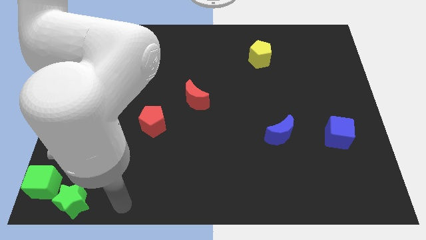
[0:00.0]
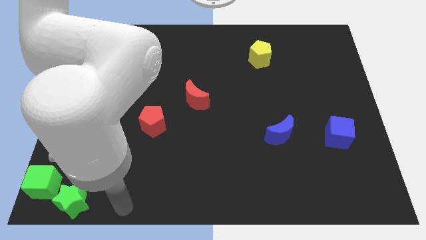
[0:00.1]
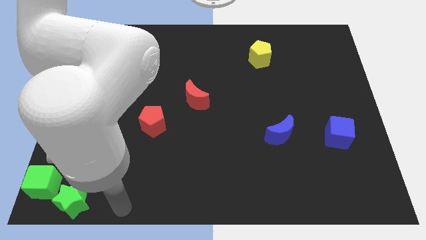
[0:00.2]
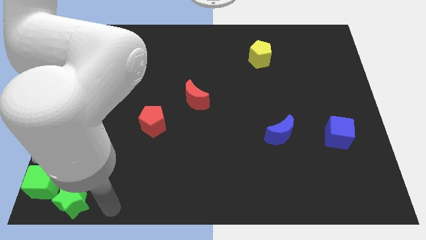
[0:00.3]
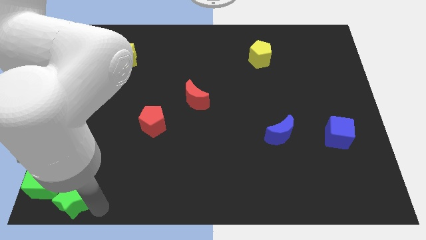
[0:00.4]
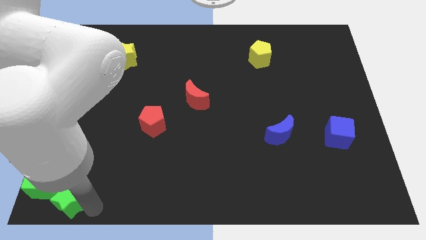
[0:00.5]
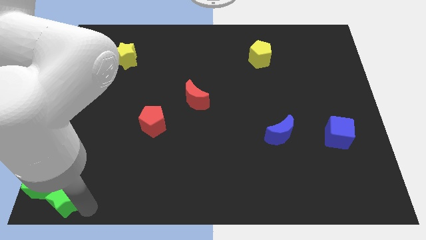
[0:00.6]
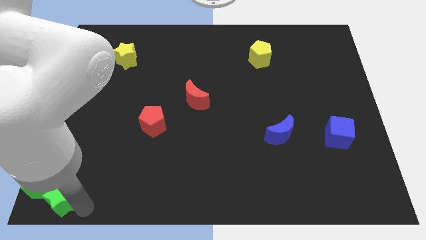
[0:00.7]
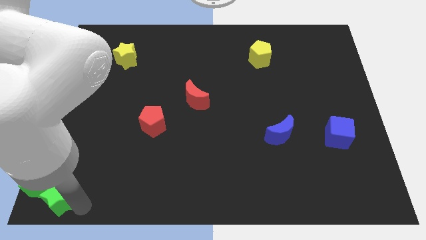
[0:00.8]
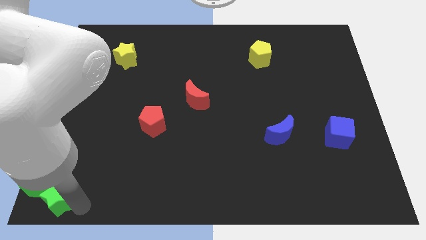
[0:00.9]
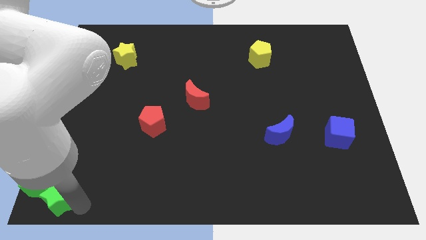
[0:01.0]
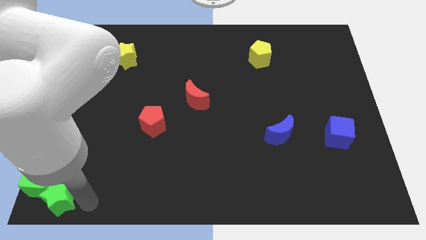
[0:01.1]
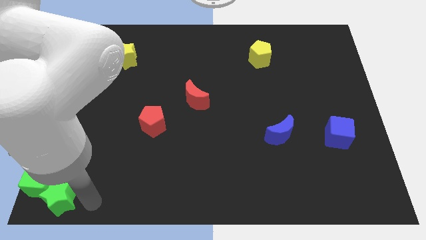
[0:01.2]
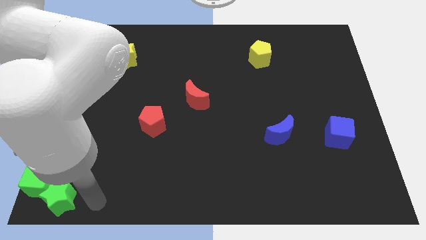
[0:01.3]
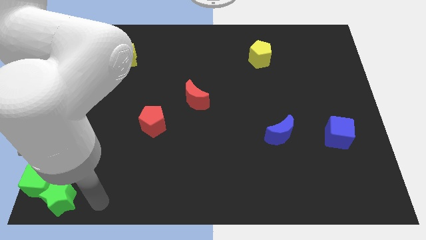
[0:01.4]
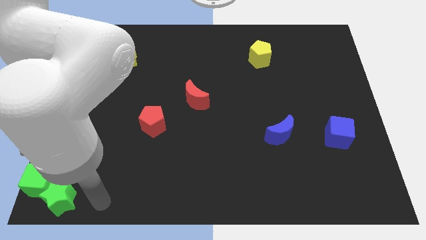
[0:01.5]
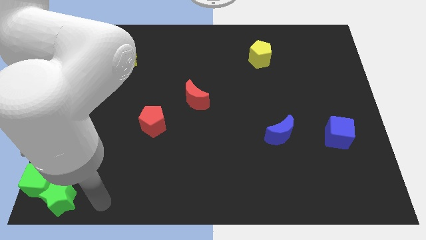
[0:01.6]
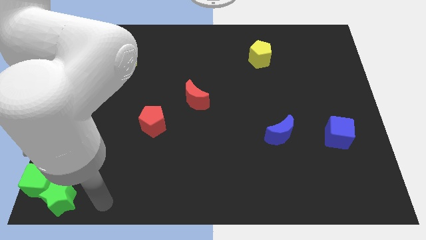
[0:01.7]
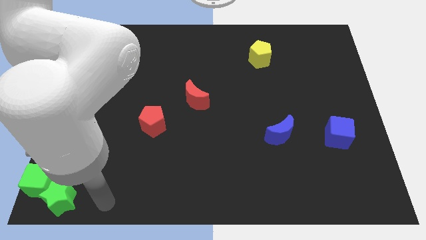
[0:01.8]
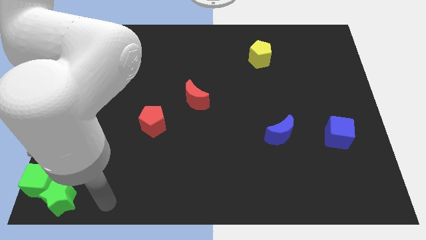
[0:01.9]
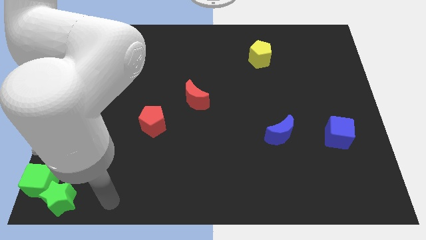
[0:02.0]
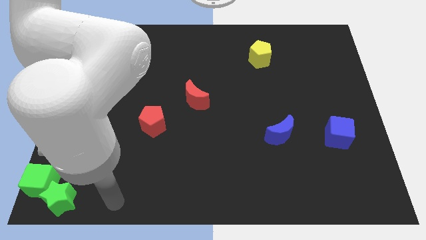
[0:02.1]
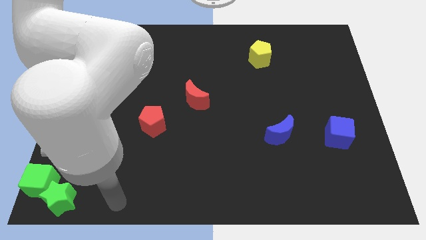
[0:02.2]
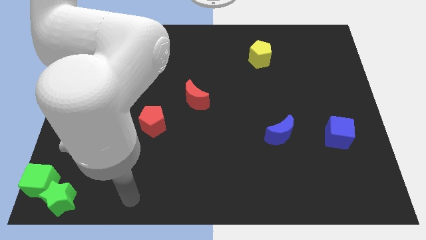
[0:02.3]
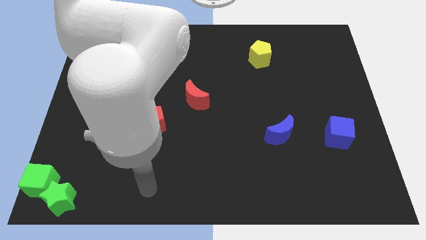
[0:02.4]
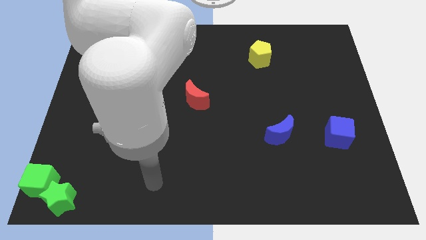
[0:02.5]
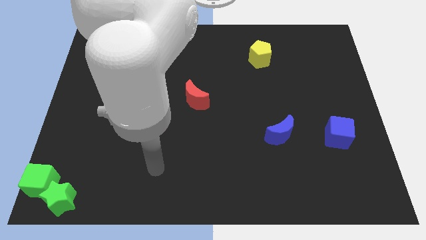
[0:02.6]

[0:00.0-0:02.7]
move the green star into the green cube

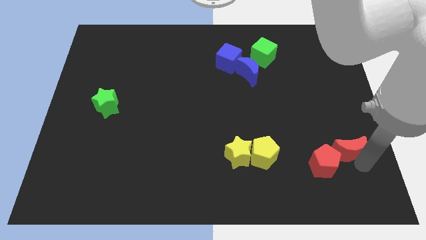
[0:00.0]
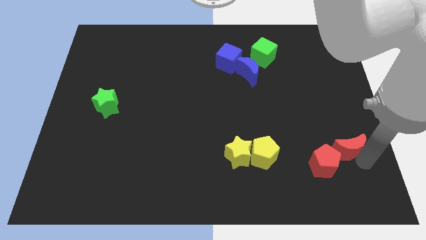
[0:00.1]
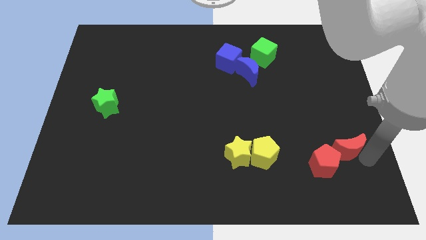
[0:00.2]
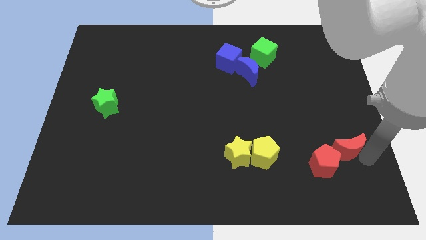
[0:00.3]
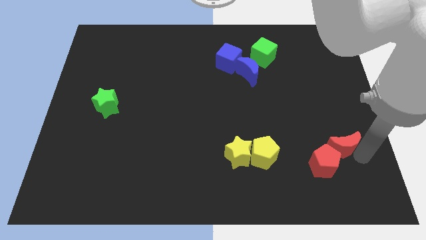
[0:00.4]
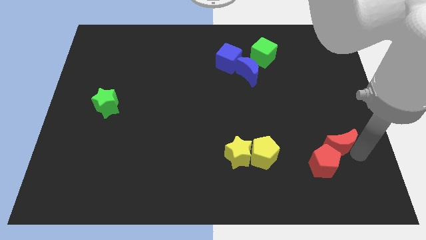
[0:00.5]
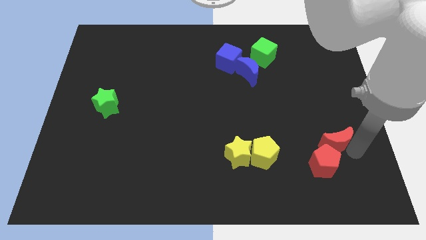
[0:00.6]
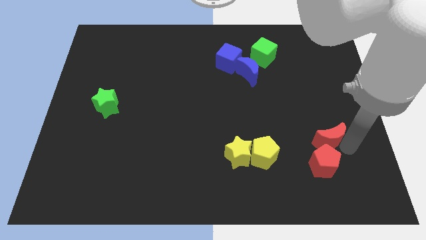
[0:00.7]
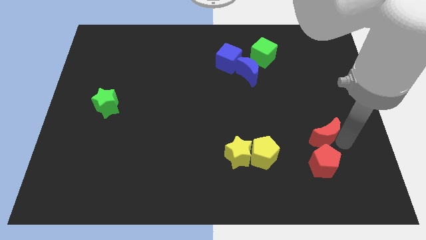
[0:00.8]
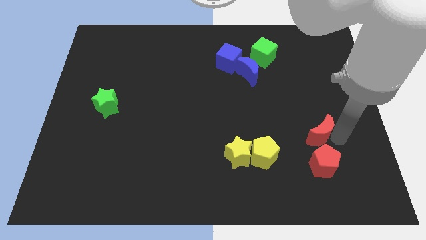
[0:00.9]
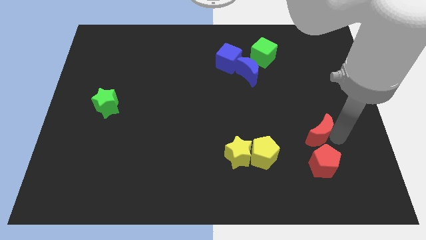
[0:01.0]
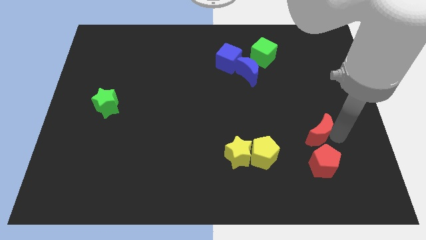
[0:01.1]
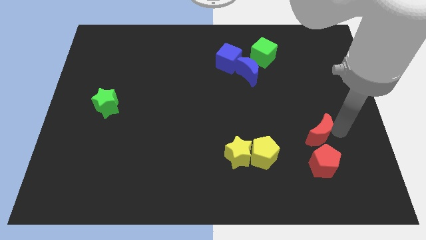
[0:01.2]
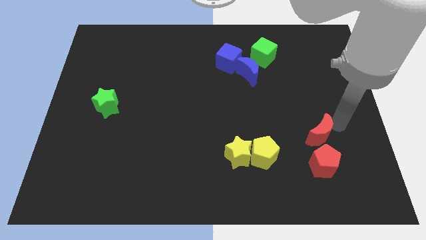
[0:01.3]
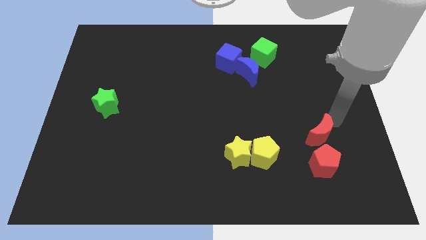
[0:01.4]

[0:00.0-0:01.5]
move the red crescent towards the red pentagon

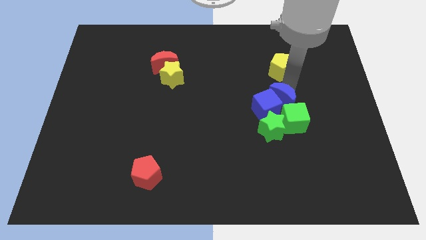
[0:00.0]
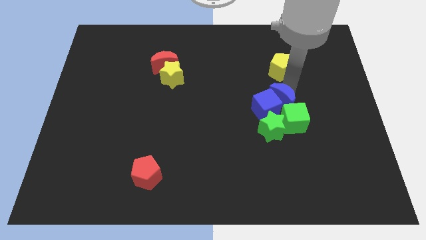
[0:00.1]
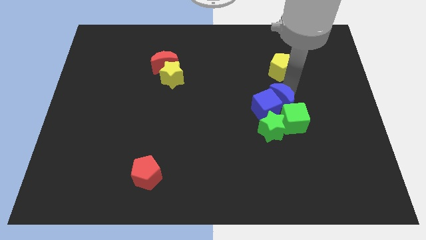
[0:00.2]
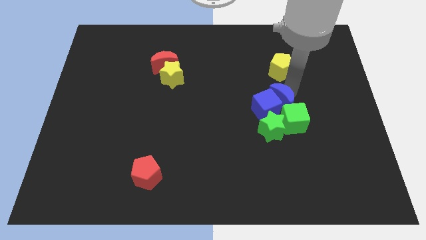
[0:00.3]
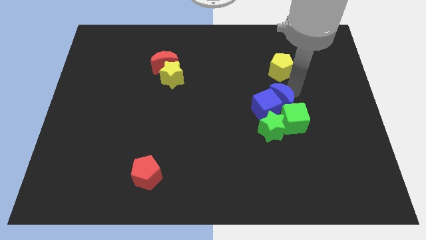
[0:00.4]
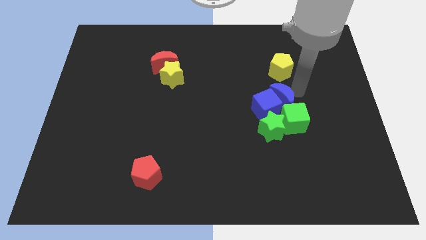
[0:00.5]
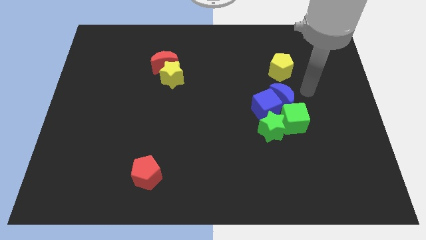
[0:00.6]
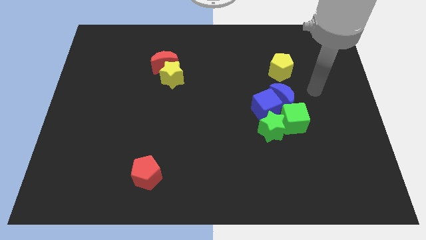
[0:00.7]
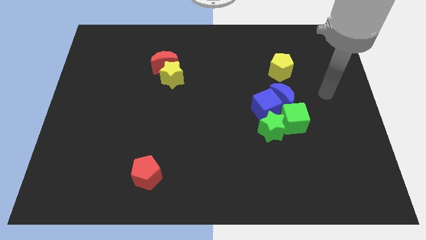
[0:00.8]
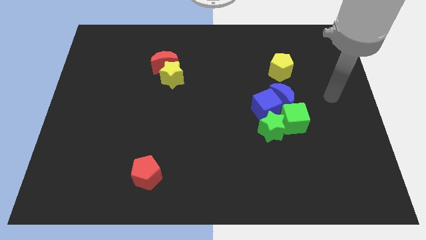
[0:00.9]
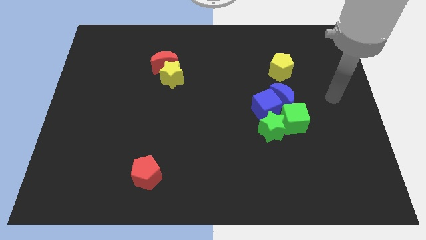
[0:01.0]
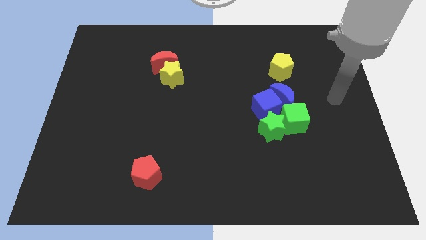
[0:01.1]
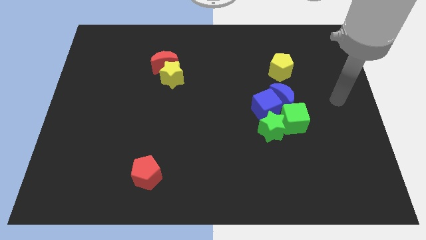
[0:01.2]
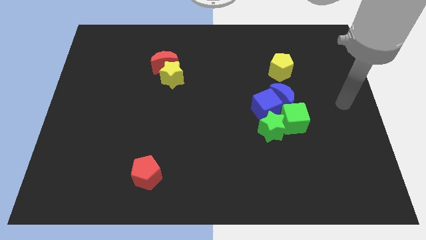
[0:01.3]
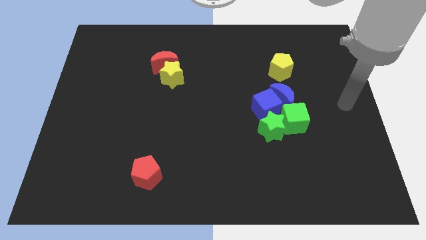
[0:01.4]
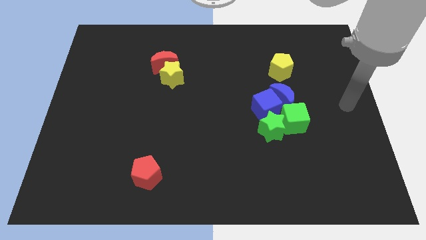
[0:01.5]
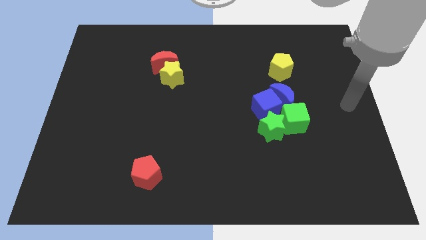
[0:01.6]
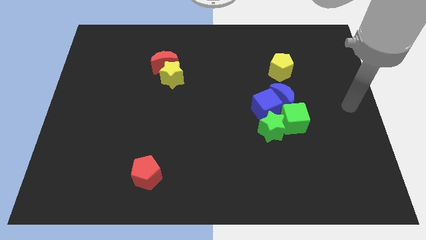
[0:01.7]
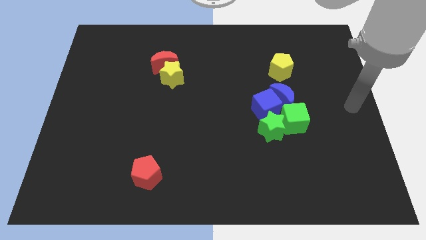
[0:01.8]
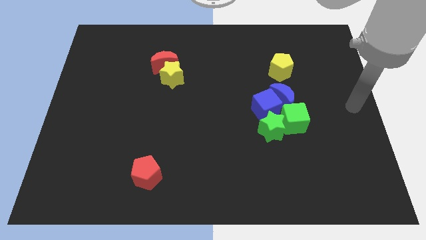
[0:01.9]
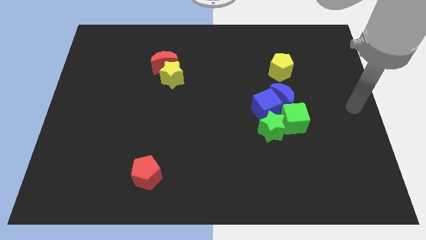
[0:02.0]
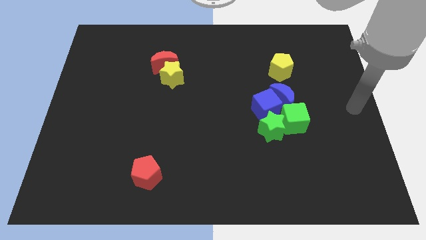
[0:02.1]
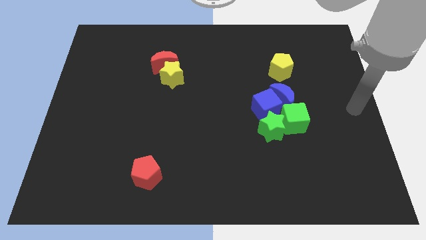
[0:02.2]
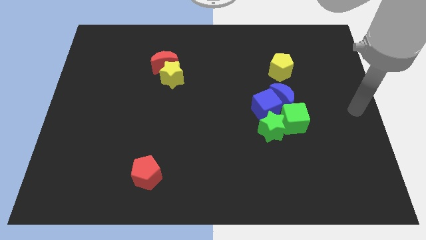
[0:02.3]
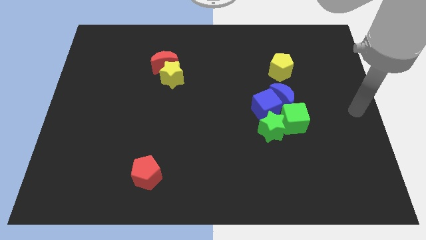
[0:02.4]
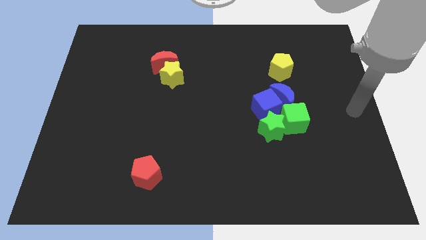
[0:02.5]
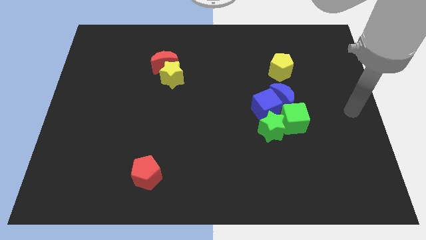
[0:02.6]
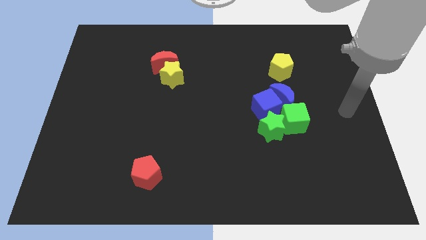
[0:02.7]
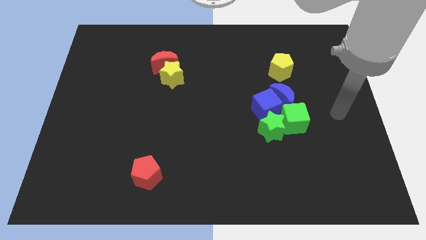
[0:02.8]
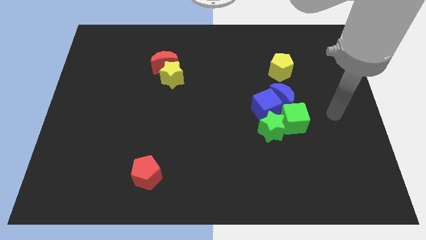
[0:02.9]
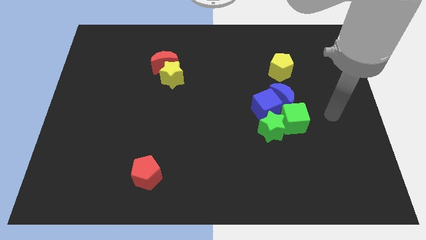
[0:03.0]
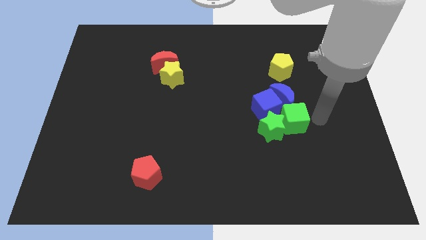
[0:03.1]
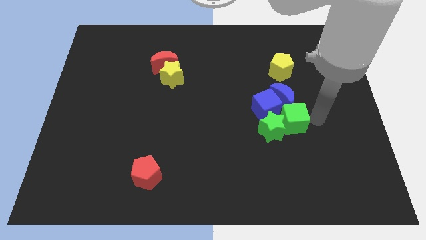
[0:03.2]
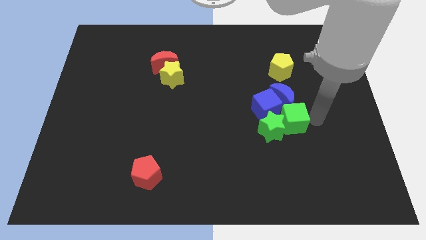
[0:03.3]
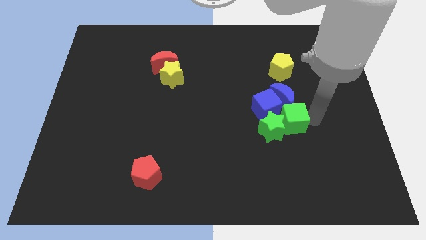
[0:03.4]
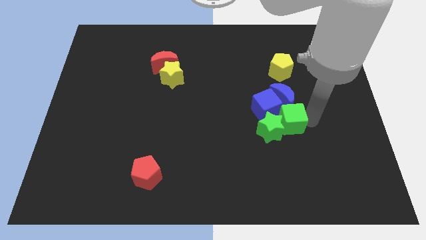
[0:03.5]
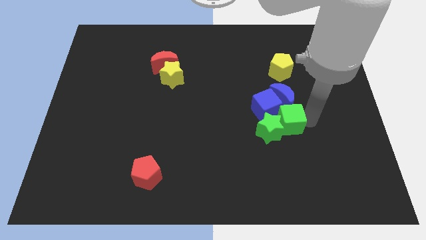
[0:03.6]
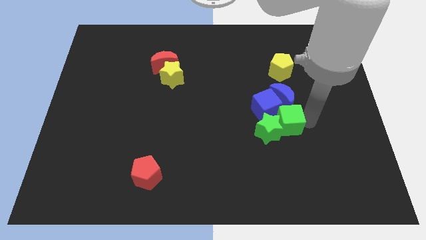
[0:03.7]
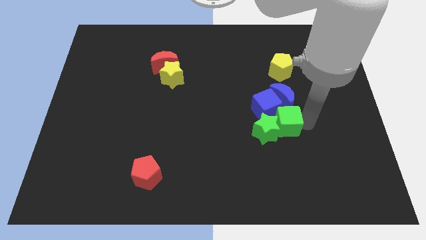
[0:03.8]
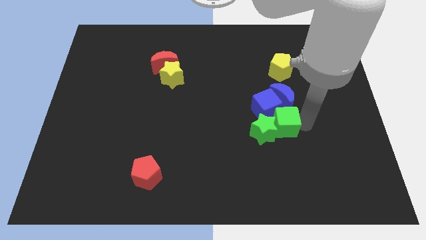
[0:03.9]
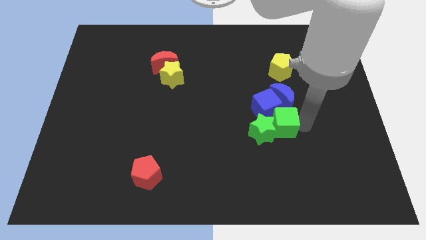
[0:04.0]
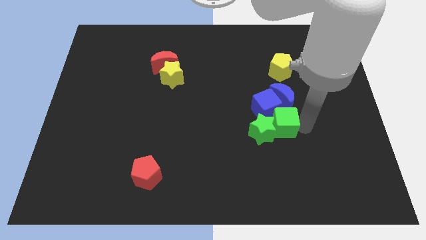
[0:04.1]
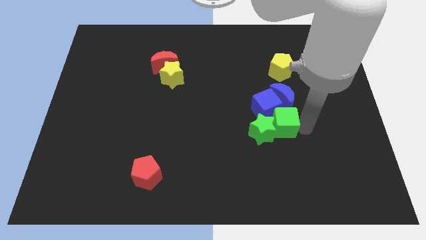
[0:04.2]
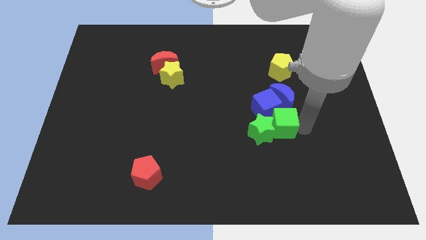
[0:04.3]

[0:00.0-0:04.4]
slightly move the green blocks

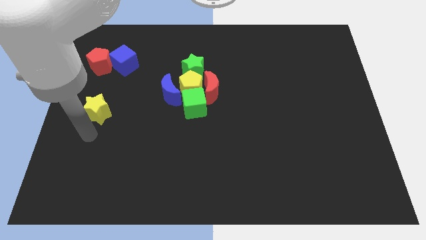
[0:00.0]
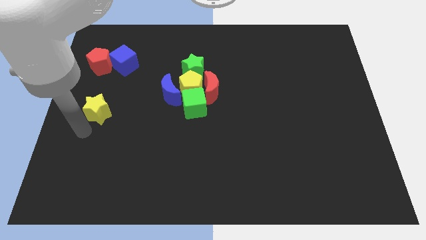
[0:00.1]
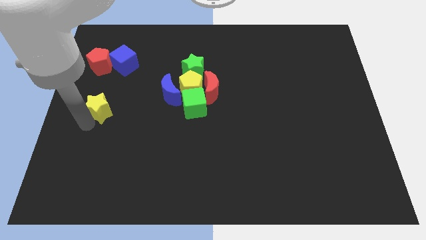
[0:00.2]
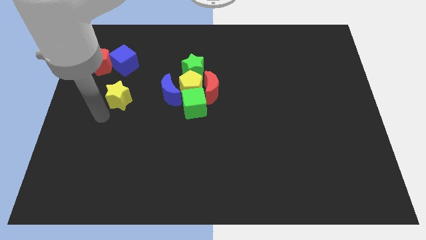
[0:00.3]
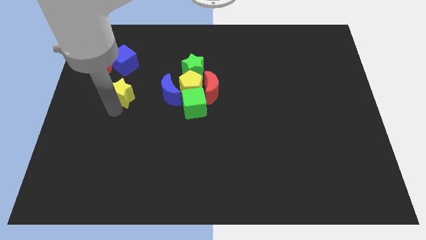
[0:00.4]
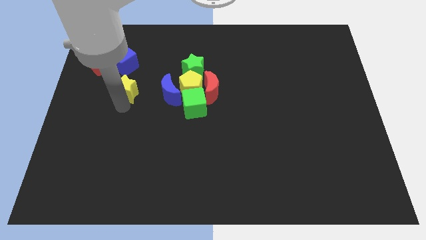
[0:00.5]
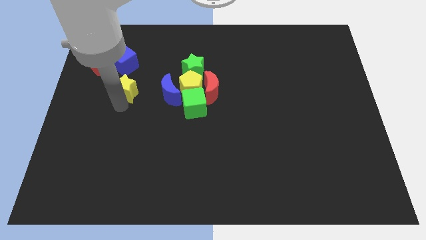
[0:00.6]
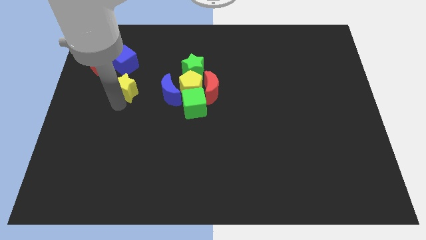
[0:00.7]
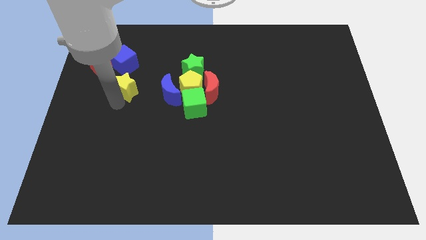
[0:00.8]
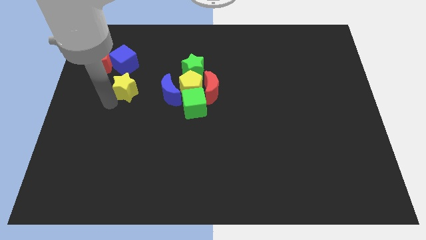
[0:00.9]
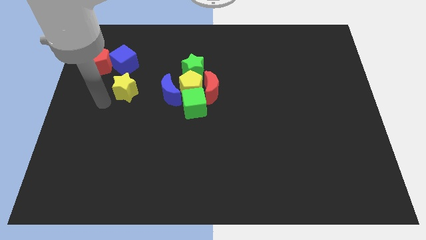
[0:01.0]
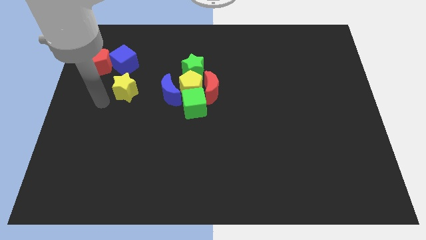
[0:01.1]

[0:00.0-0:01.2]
place the yellow star to the left of the blue crescent
